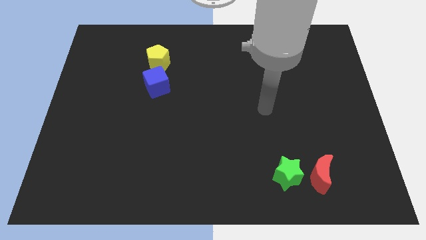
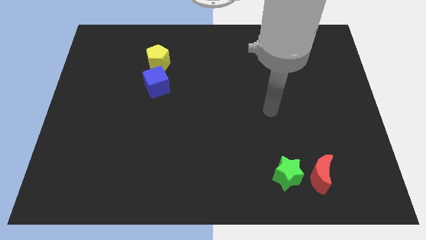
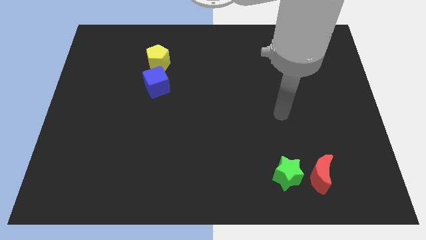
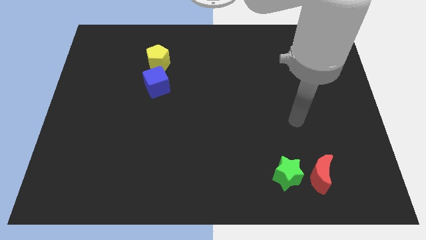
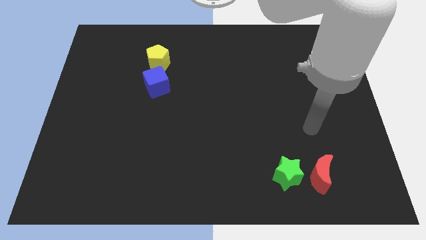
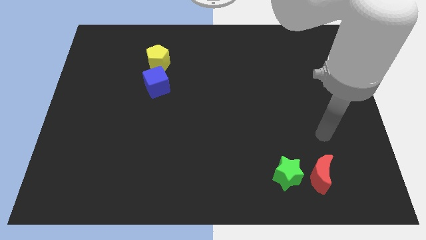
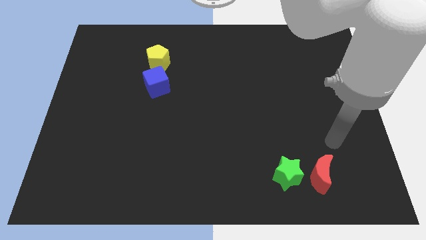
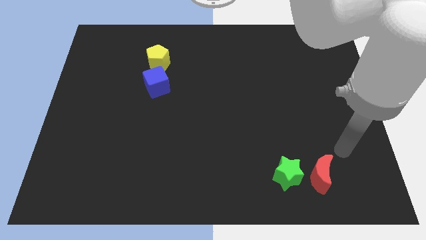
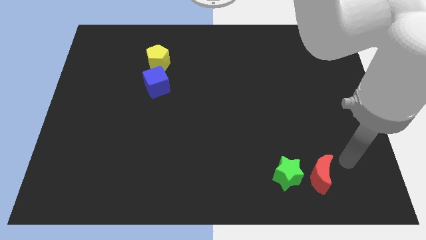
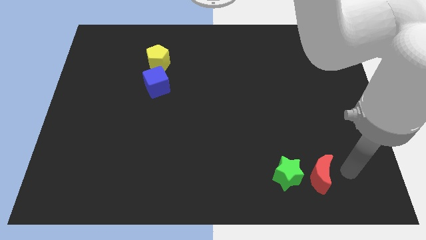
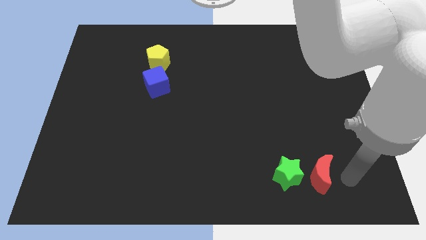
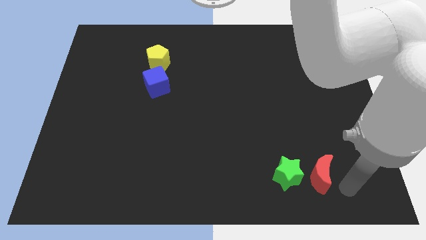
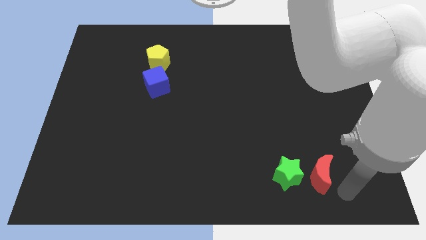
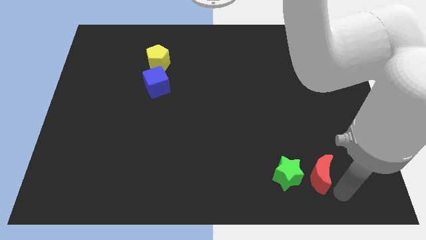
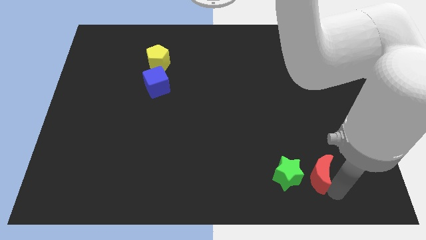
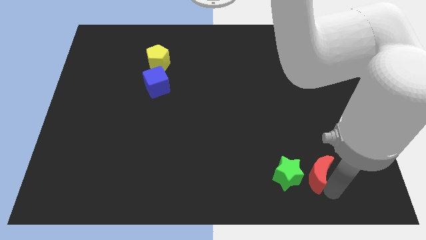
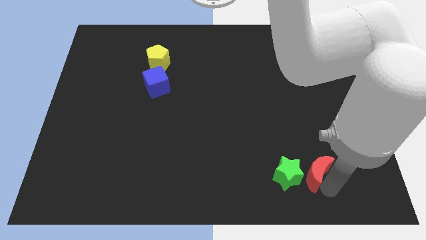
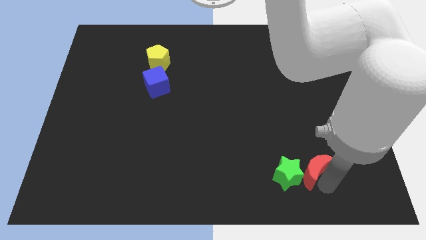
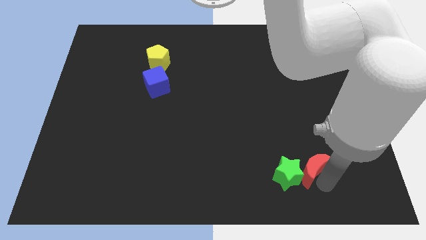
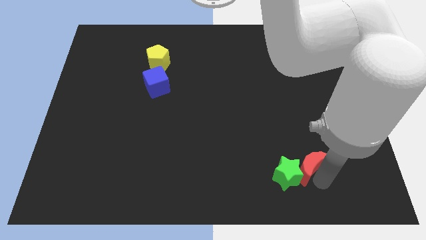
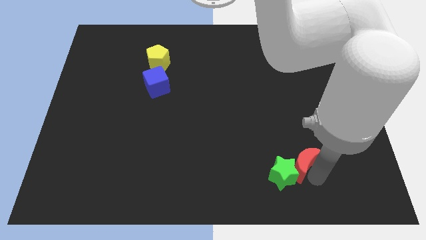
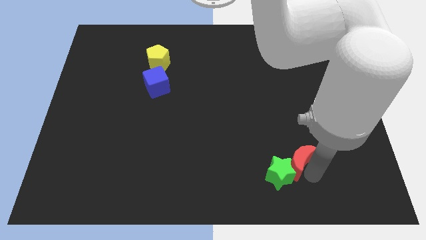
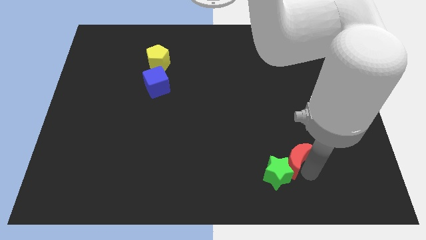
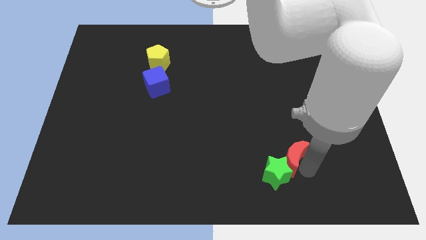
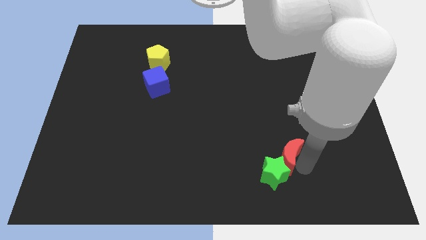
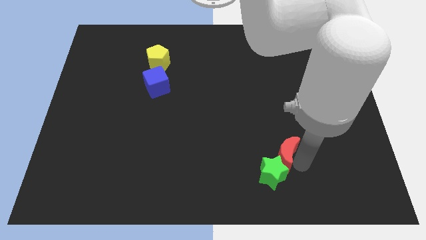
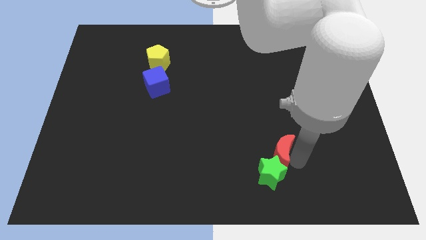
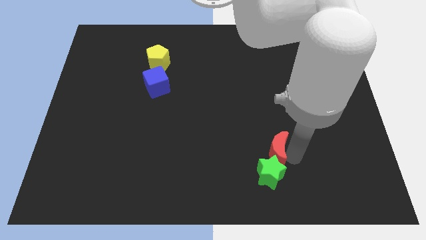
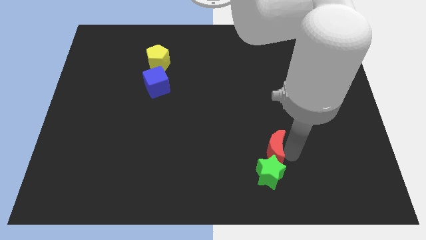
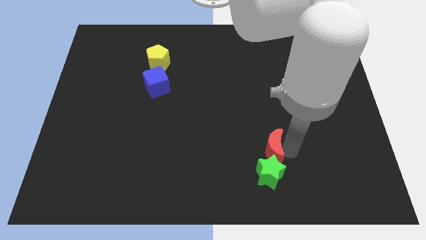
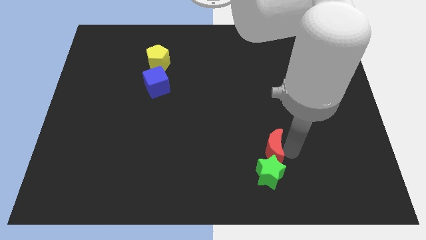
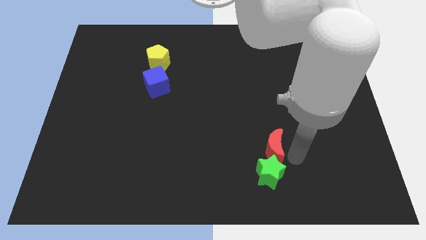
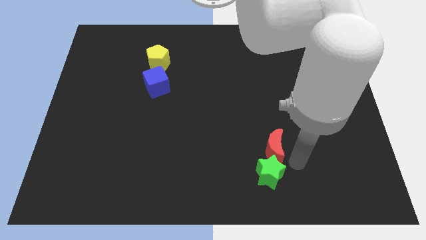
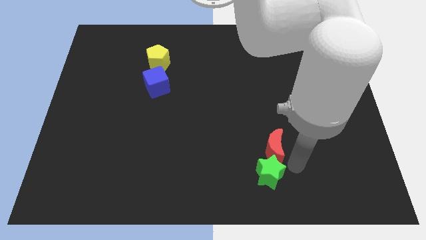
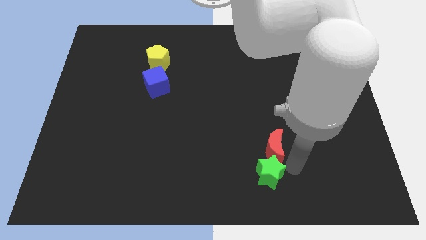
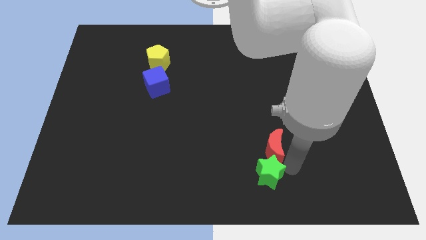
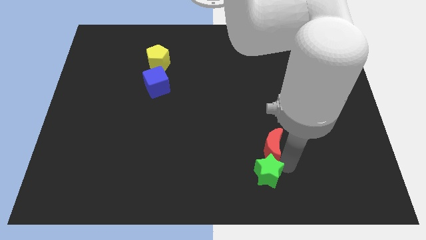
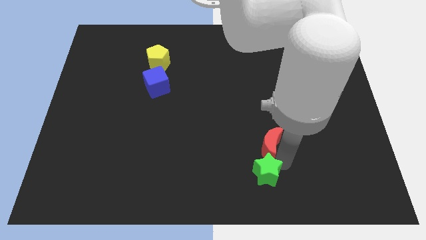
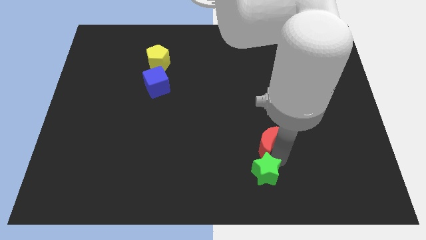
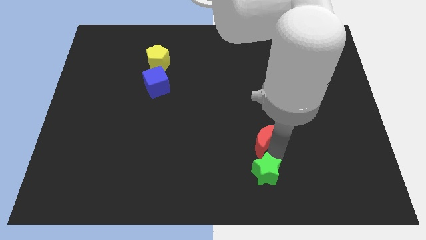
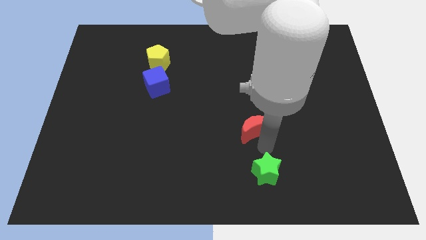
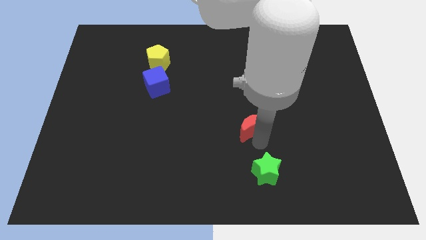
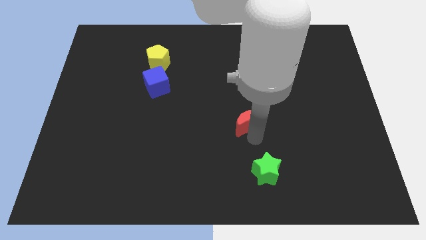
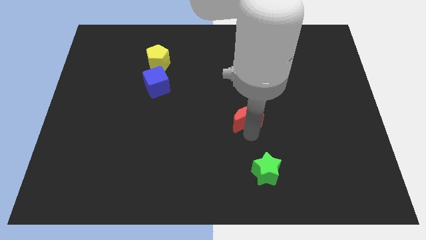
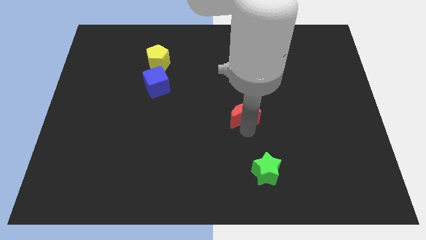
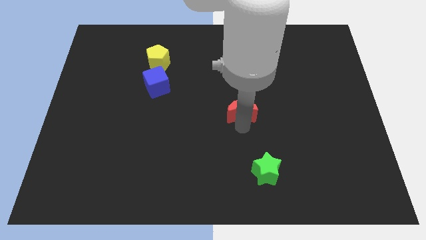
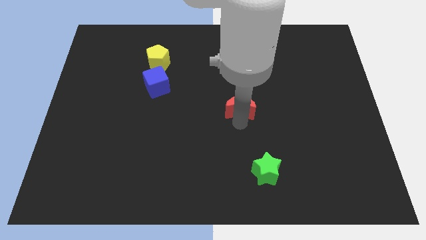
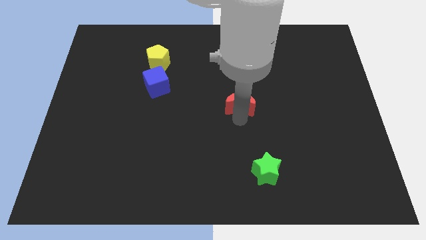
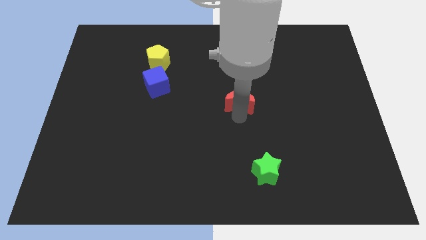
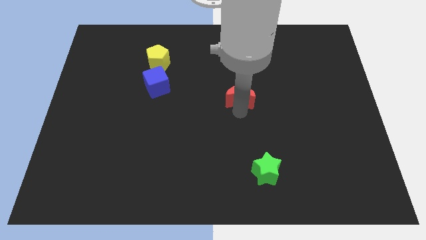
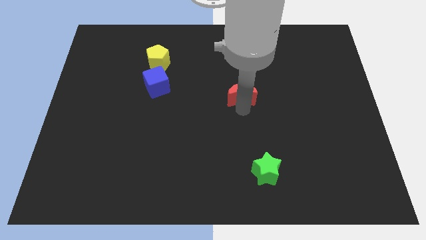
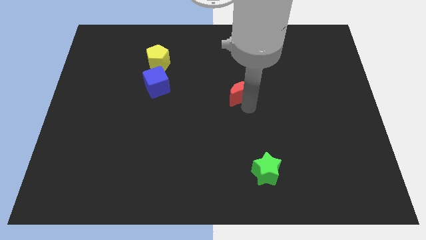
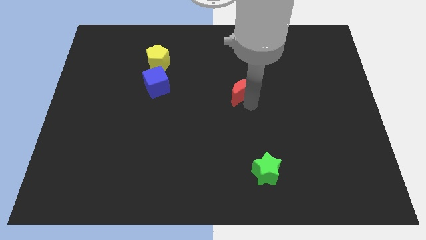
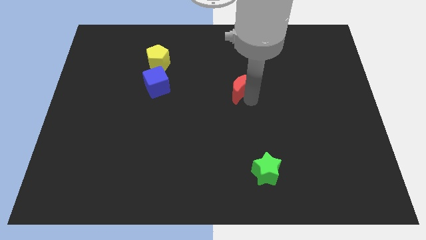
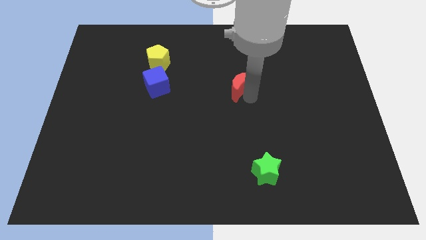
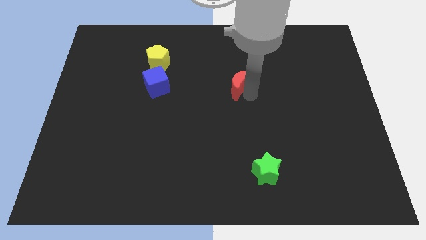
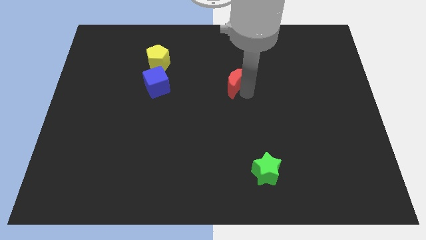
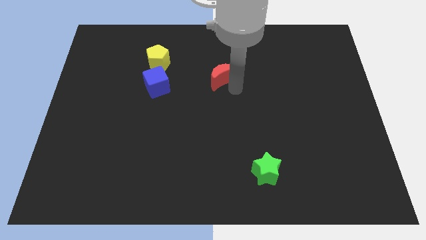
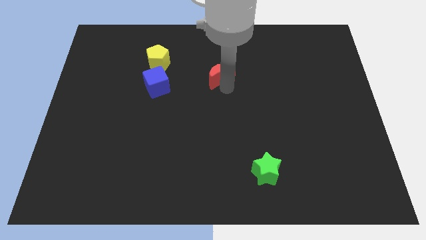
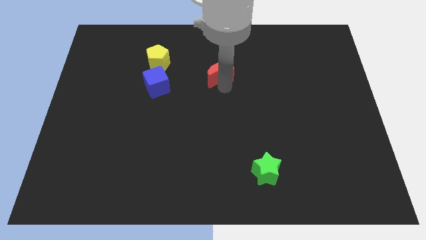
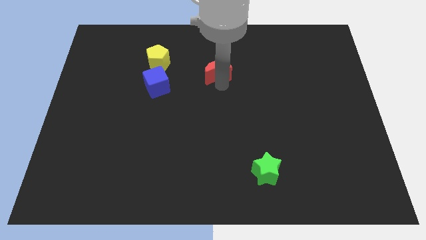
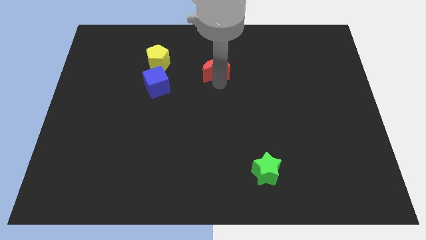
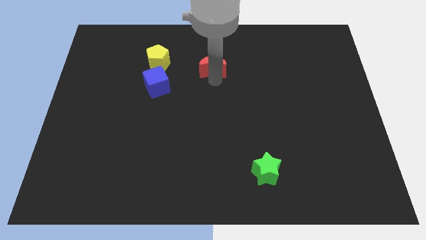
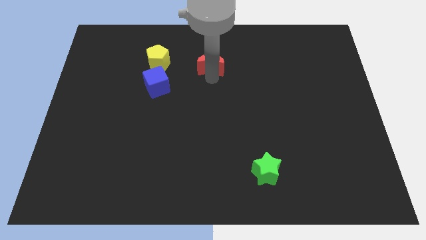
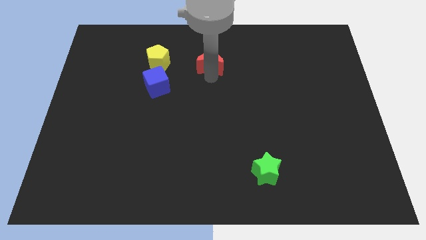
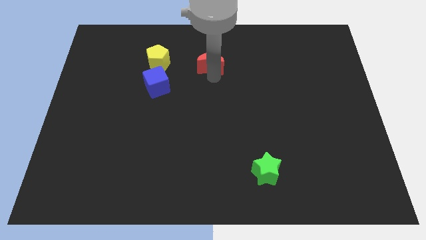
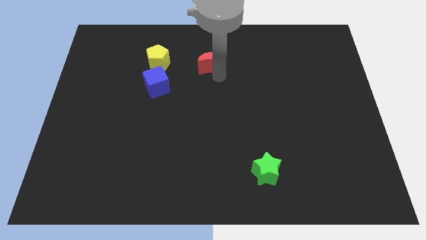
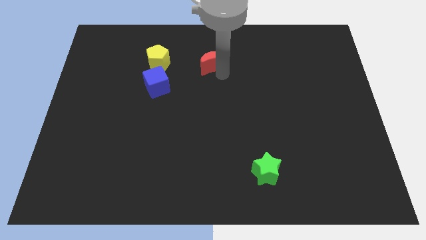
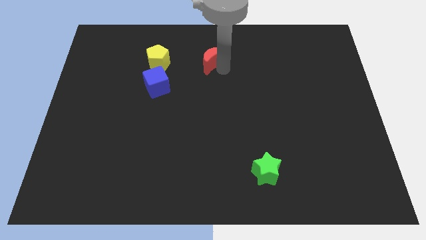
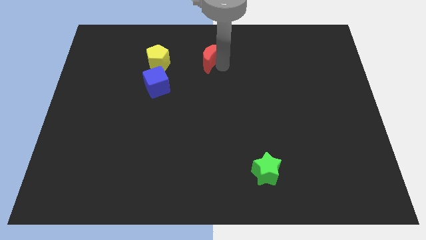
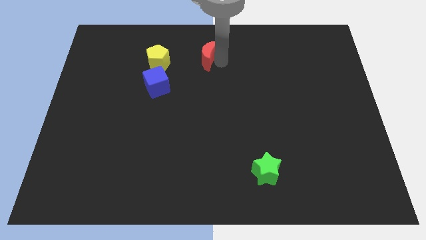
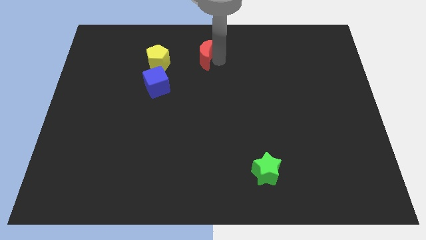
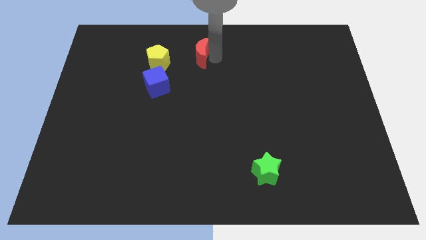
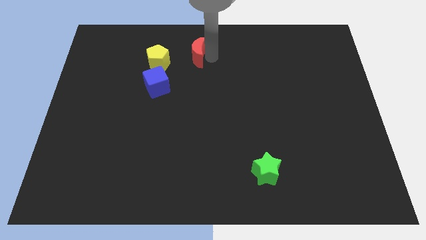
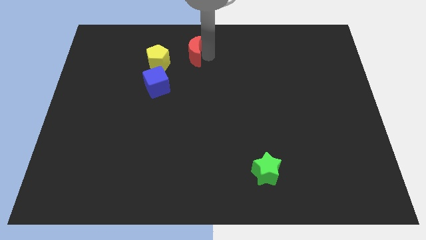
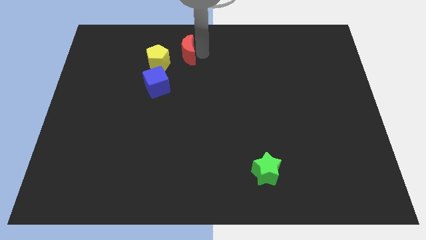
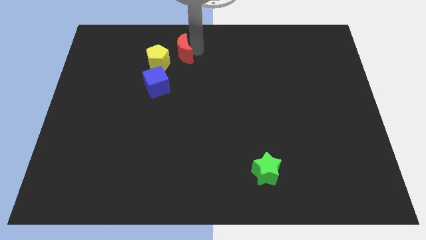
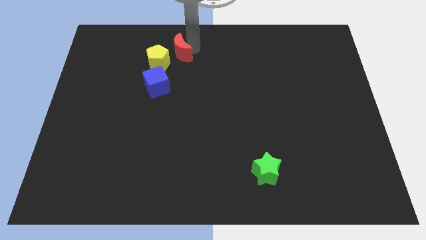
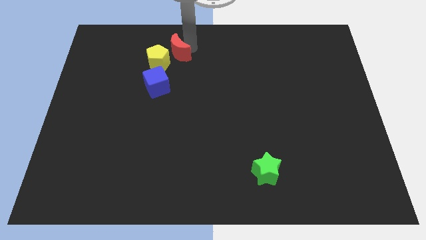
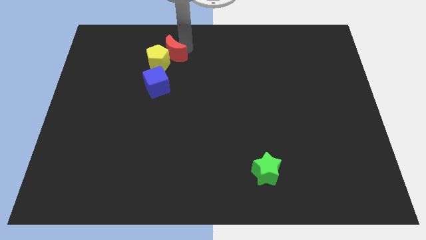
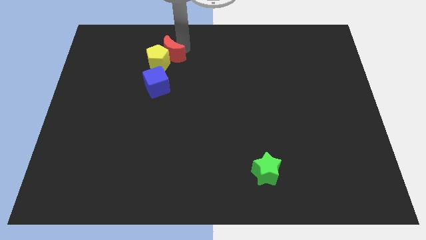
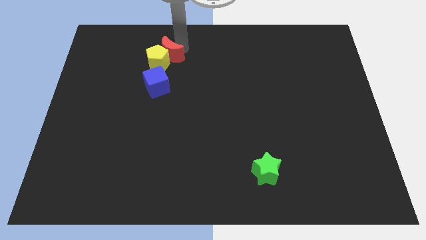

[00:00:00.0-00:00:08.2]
move the red moon next to the pentagon

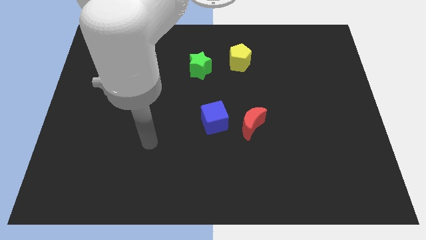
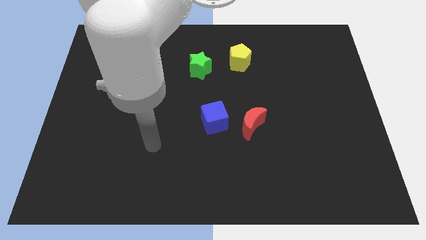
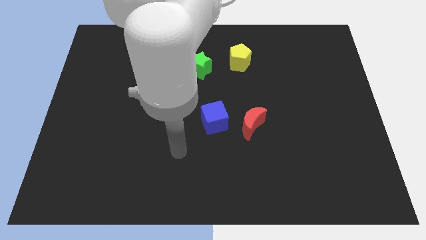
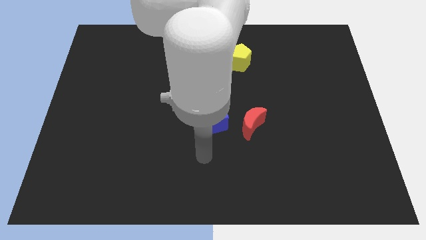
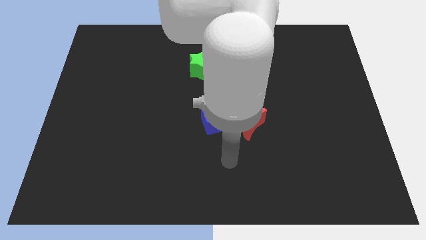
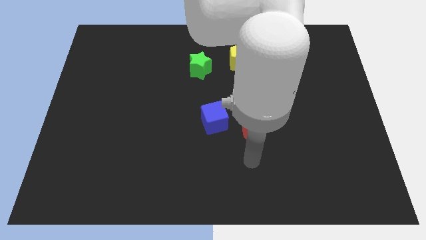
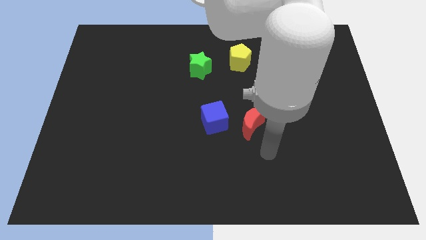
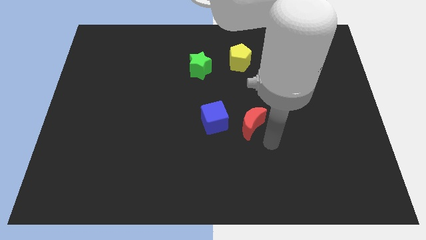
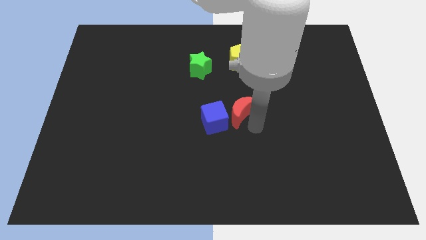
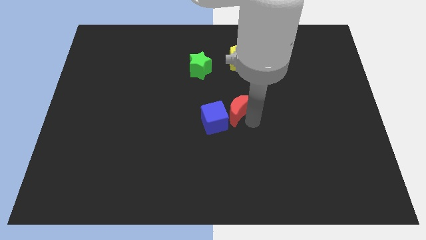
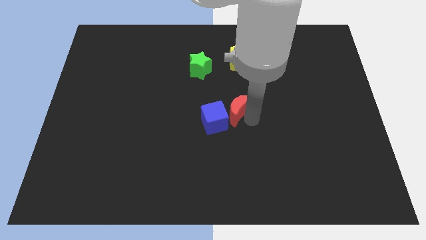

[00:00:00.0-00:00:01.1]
put the red block next to the cube
